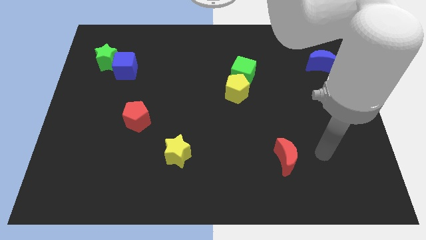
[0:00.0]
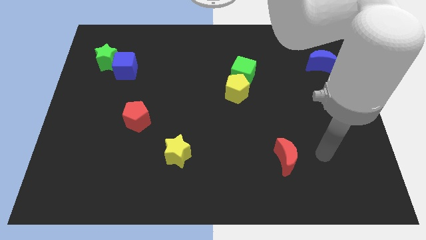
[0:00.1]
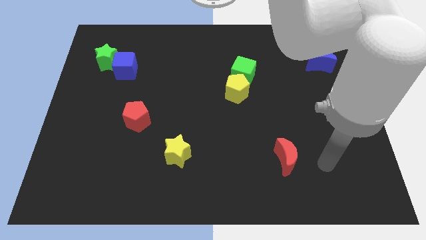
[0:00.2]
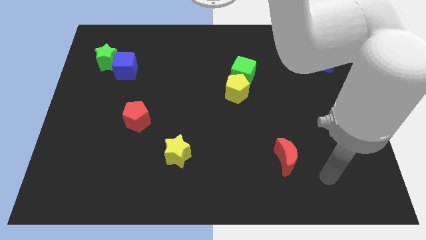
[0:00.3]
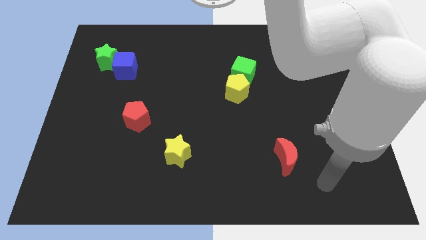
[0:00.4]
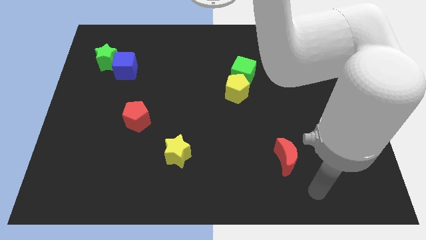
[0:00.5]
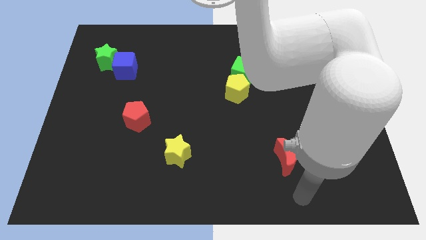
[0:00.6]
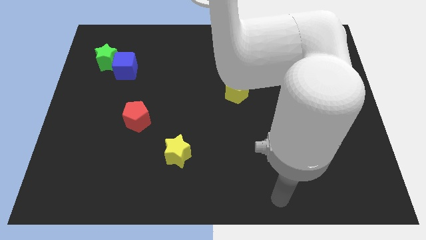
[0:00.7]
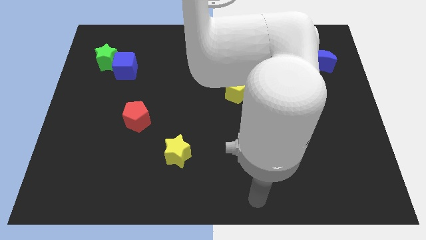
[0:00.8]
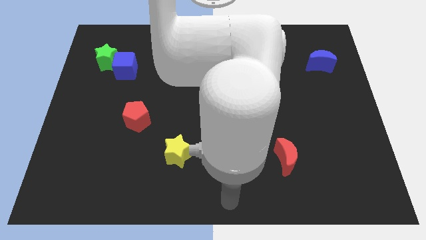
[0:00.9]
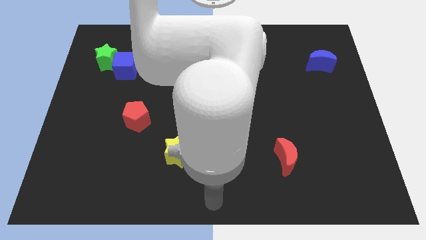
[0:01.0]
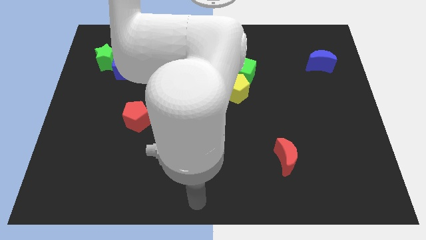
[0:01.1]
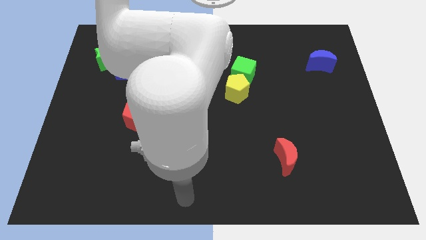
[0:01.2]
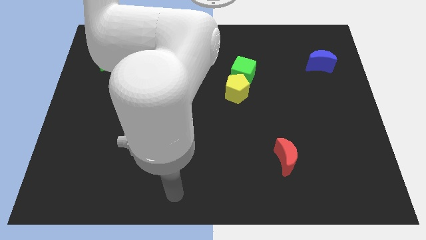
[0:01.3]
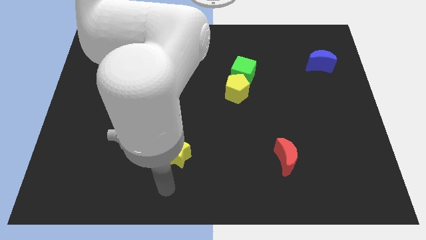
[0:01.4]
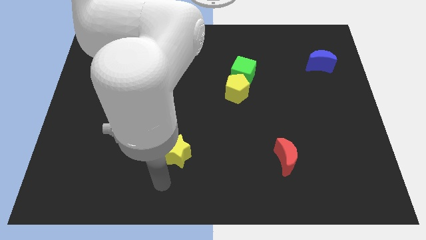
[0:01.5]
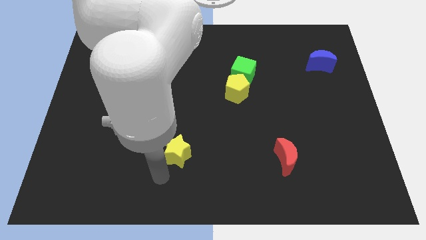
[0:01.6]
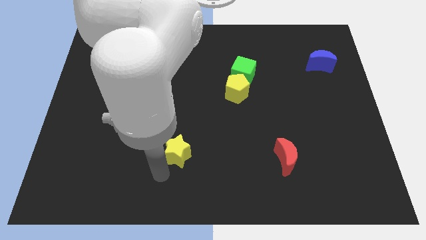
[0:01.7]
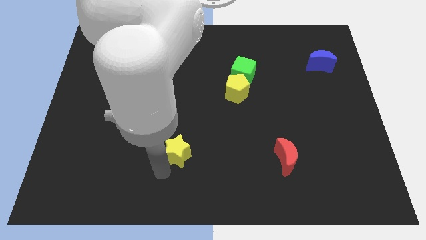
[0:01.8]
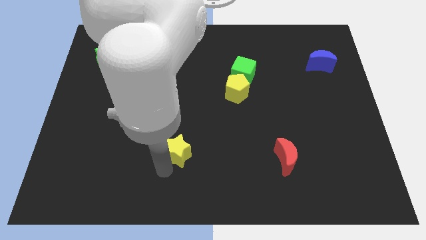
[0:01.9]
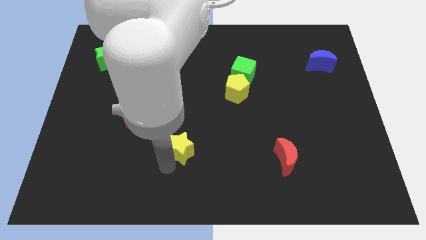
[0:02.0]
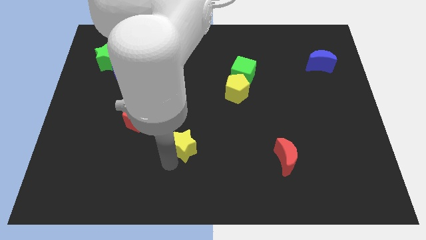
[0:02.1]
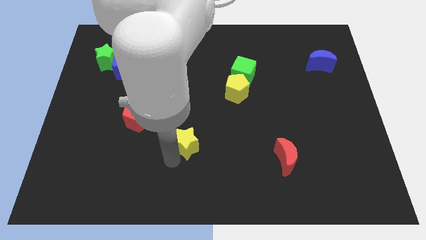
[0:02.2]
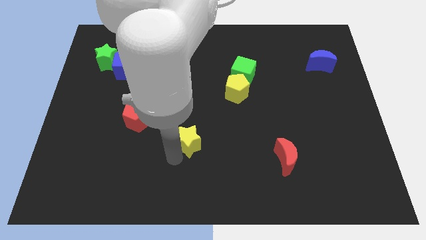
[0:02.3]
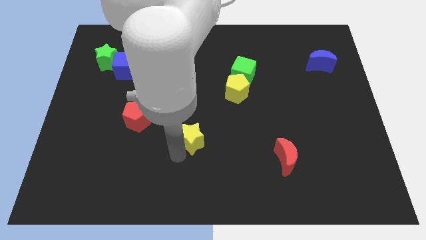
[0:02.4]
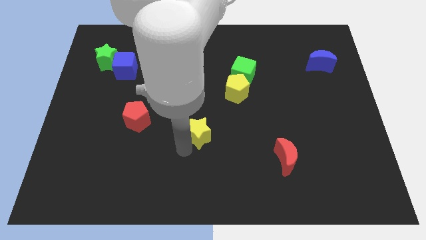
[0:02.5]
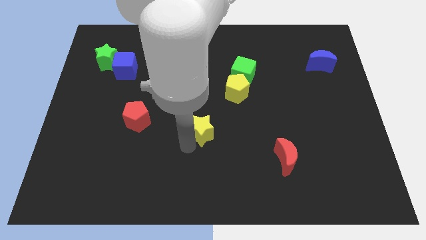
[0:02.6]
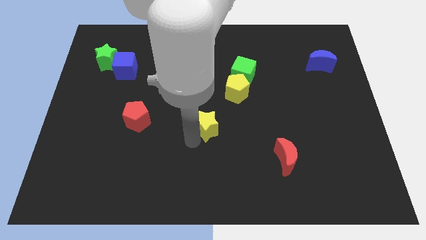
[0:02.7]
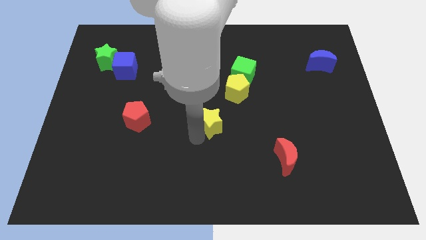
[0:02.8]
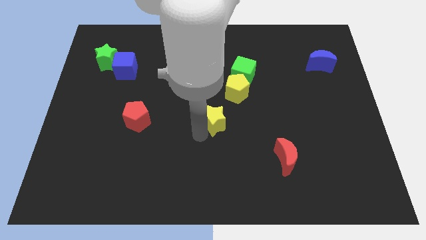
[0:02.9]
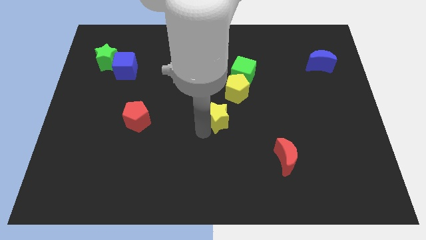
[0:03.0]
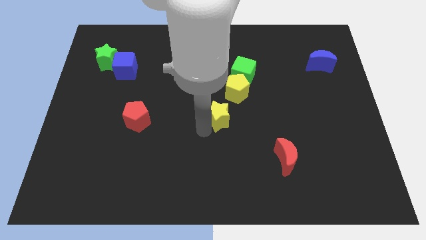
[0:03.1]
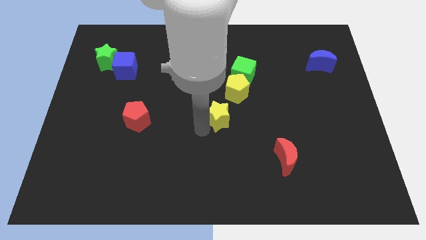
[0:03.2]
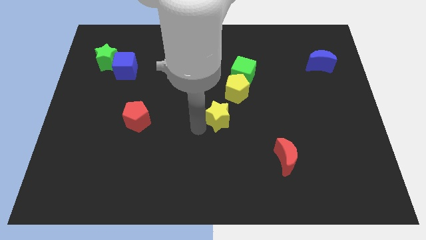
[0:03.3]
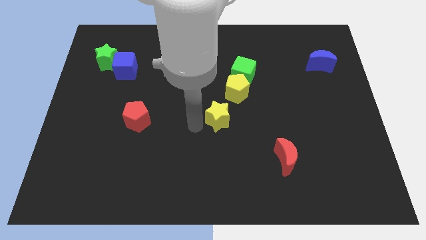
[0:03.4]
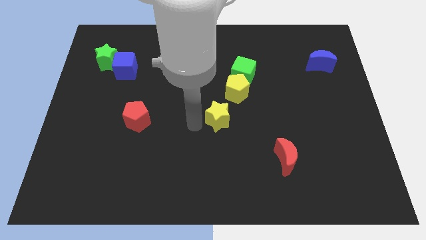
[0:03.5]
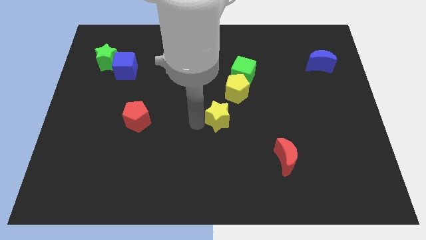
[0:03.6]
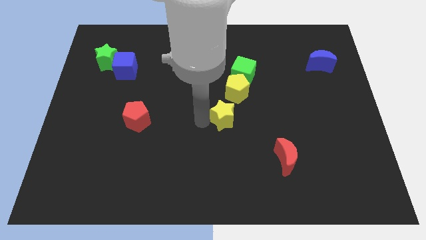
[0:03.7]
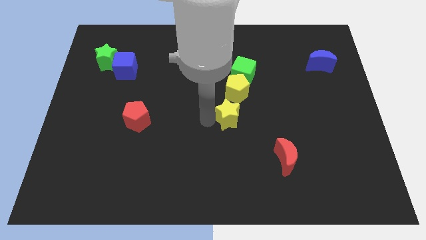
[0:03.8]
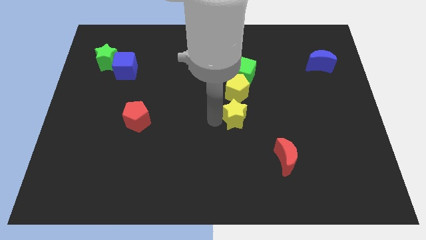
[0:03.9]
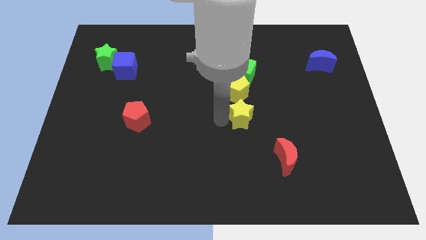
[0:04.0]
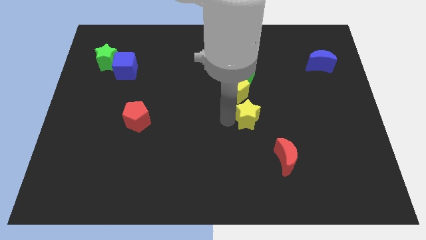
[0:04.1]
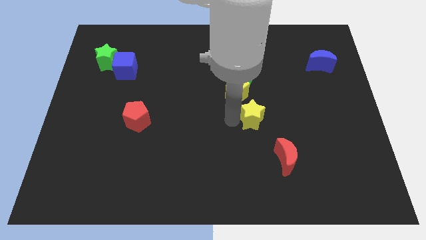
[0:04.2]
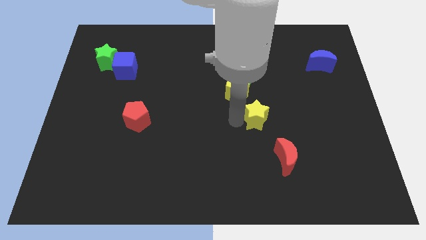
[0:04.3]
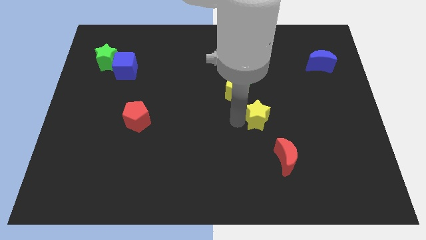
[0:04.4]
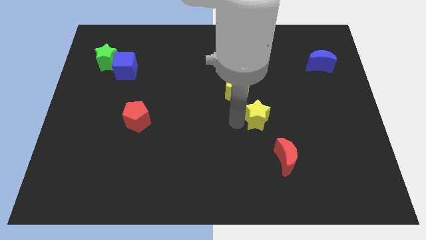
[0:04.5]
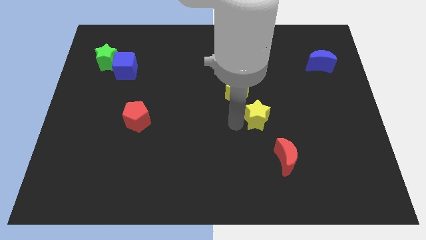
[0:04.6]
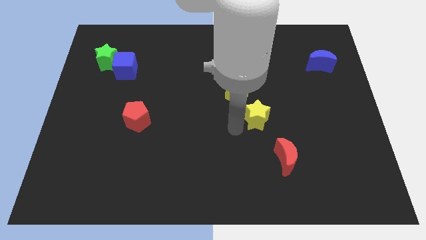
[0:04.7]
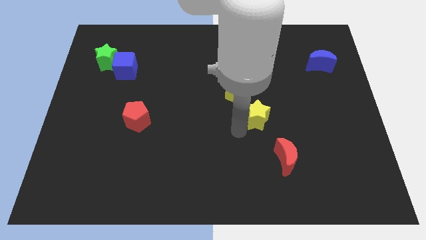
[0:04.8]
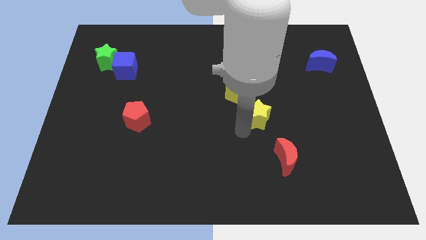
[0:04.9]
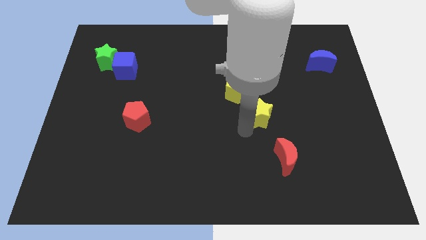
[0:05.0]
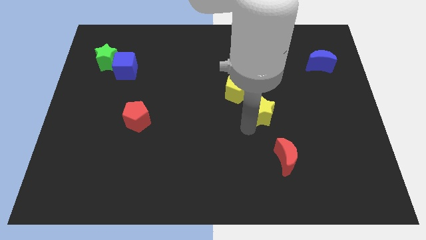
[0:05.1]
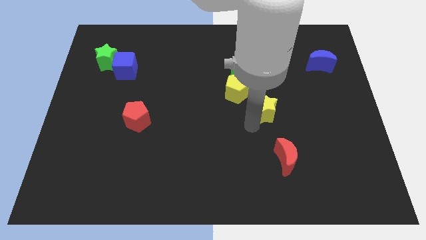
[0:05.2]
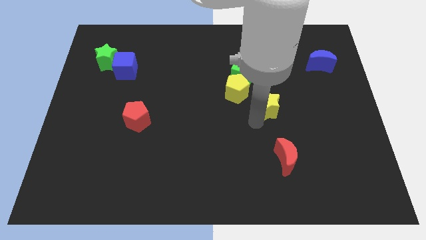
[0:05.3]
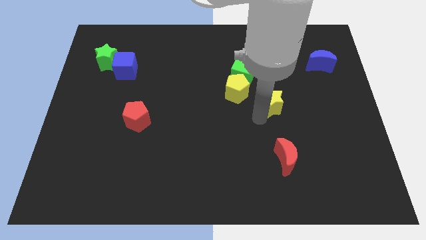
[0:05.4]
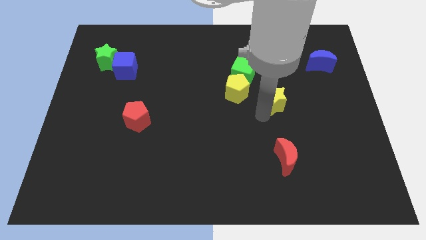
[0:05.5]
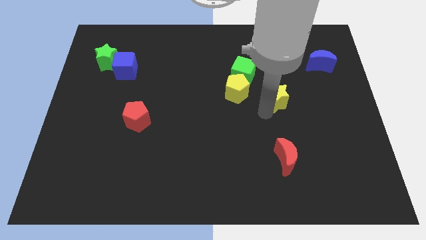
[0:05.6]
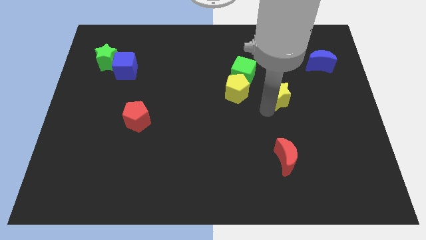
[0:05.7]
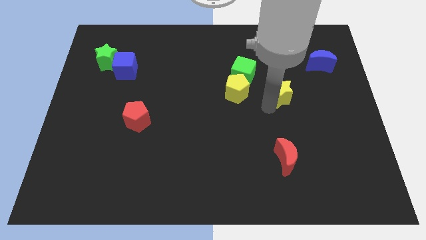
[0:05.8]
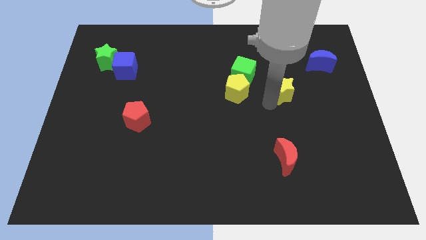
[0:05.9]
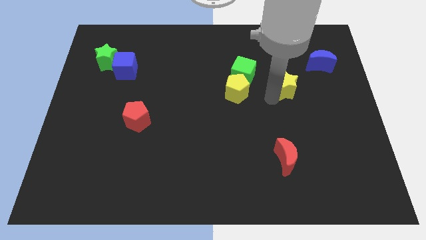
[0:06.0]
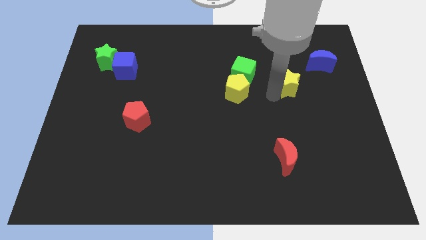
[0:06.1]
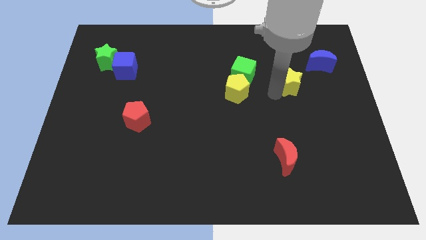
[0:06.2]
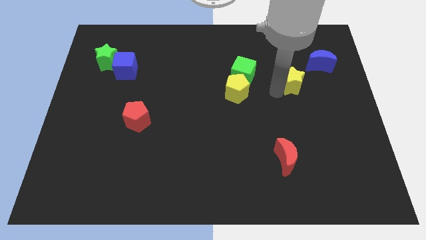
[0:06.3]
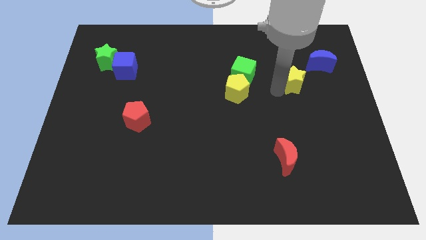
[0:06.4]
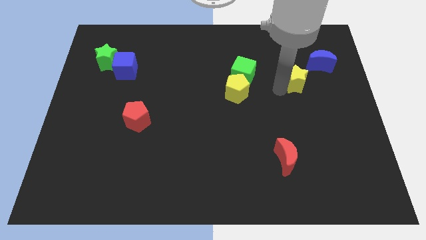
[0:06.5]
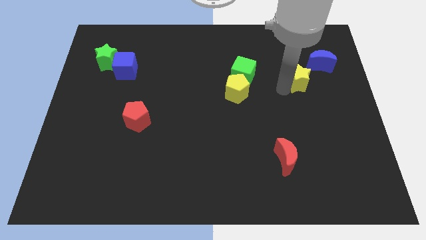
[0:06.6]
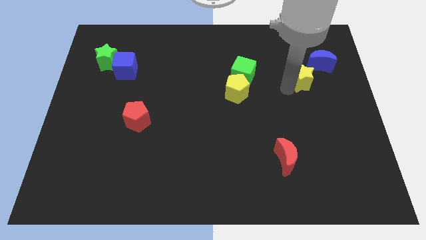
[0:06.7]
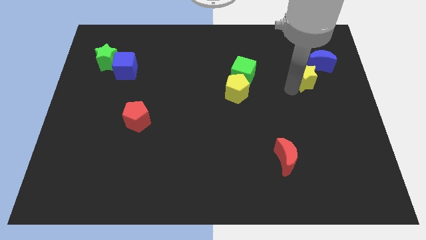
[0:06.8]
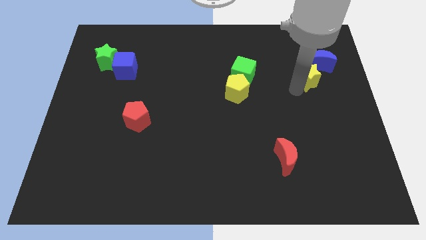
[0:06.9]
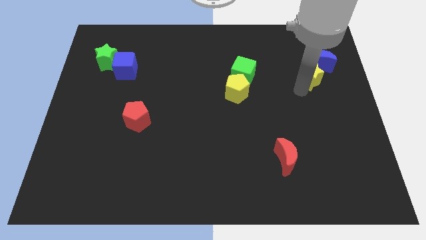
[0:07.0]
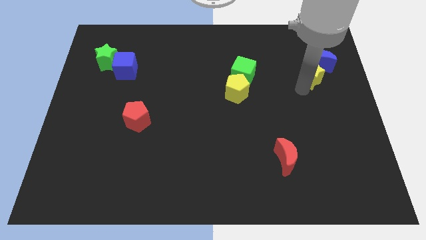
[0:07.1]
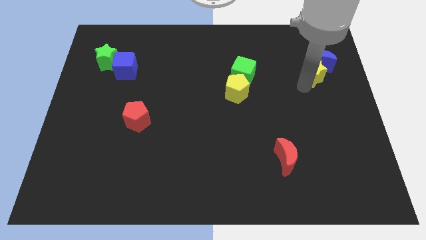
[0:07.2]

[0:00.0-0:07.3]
push the yellow star to the blue moon

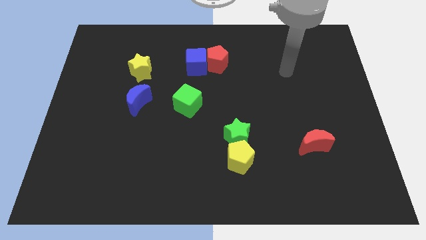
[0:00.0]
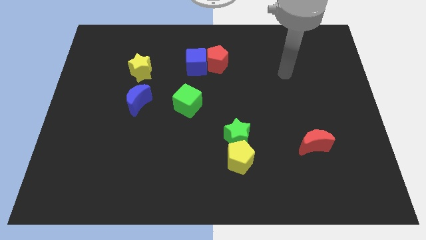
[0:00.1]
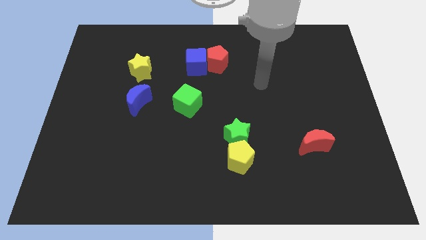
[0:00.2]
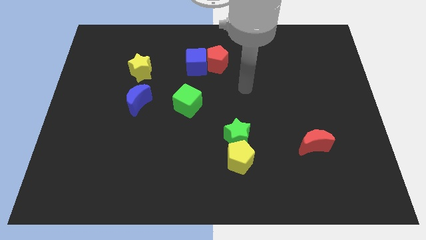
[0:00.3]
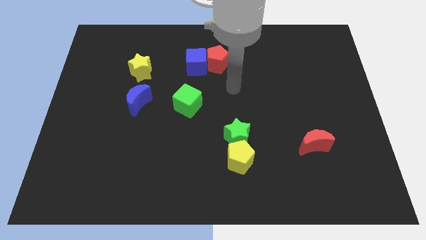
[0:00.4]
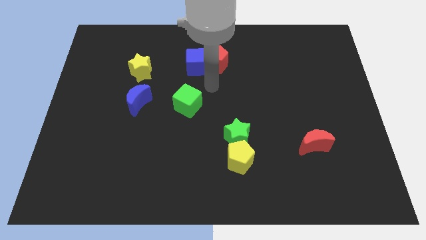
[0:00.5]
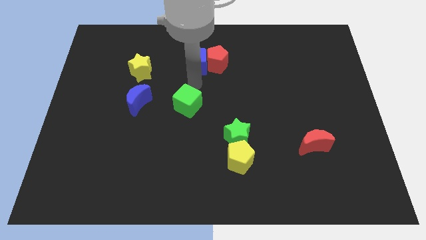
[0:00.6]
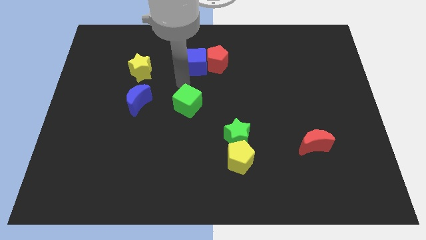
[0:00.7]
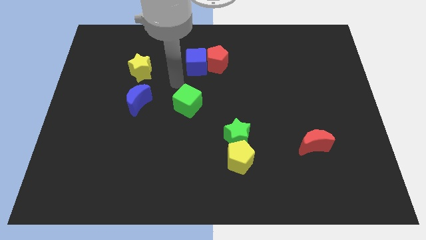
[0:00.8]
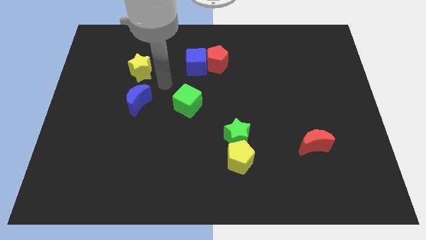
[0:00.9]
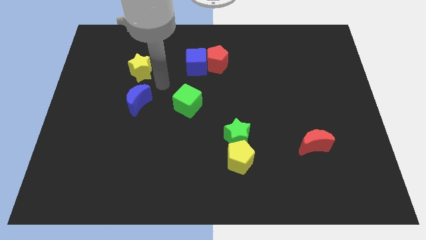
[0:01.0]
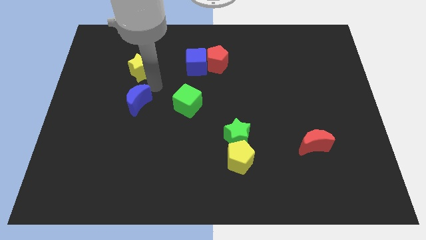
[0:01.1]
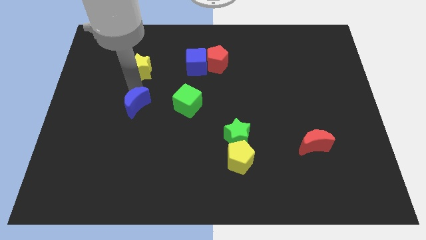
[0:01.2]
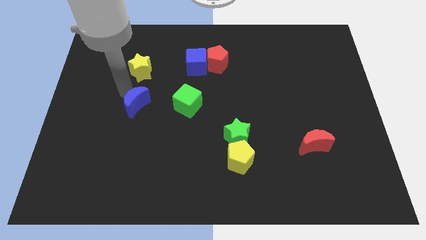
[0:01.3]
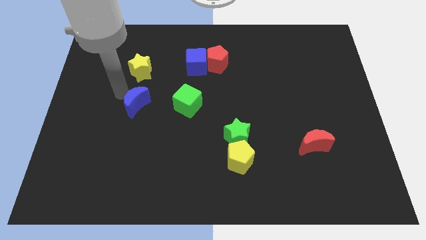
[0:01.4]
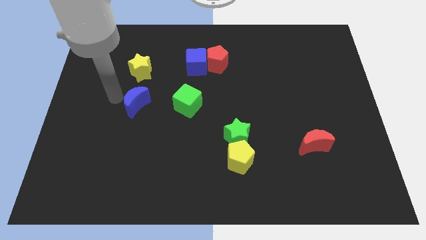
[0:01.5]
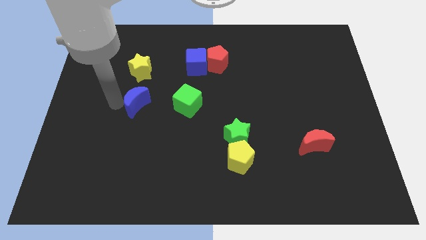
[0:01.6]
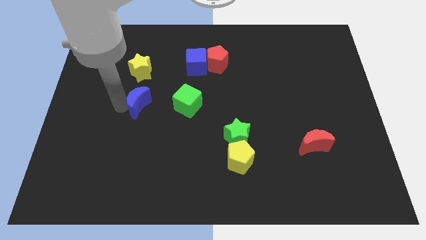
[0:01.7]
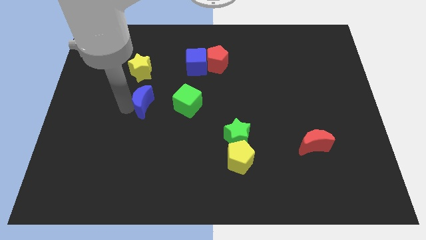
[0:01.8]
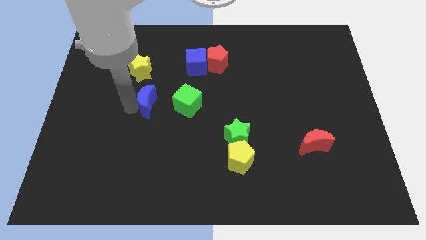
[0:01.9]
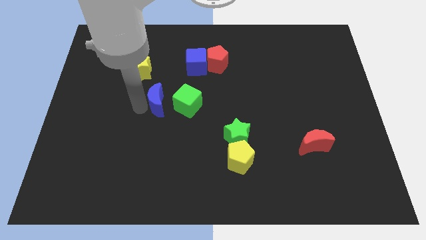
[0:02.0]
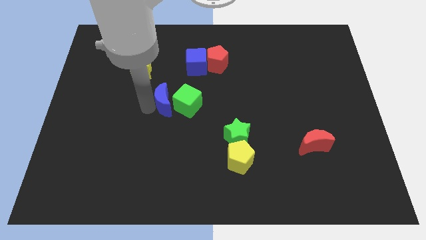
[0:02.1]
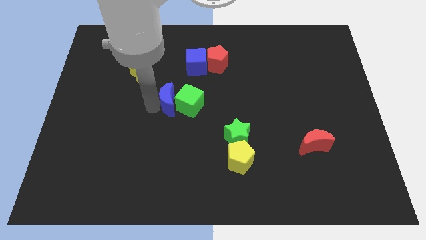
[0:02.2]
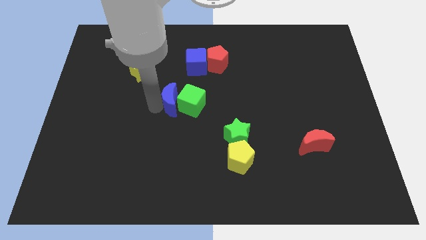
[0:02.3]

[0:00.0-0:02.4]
put the blue moon to the green cube
